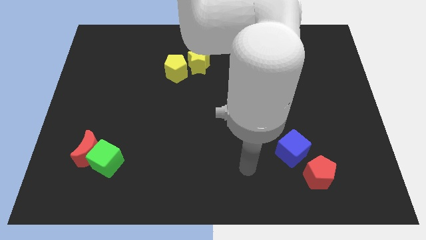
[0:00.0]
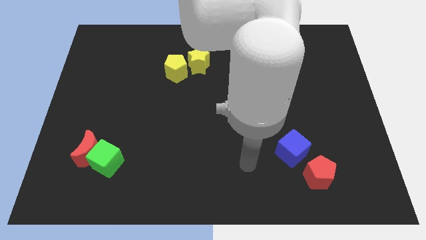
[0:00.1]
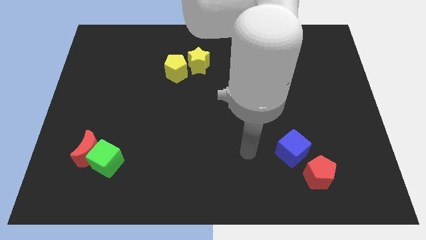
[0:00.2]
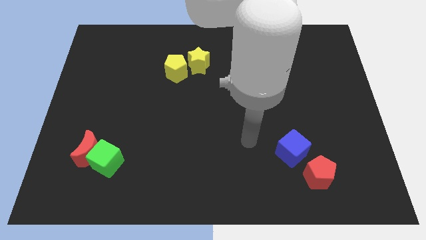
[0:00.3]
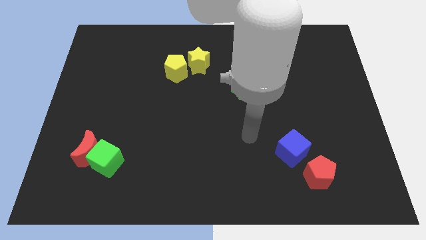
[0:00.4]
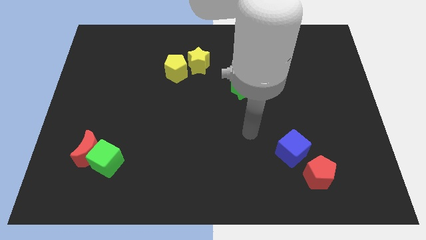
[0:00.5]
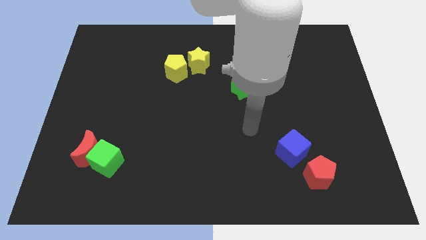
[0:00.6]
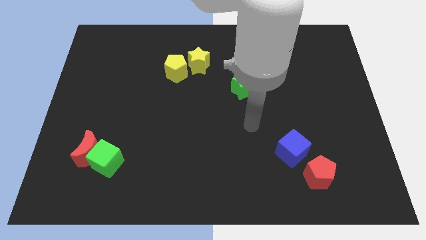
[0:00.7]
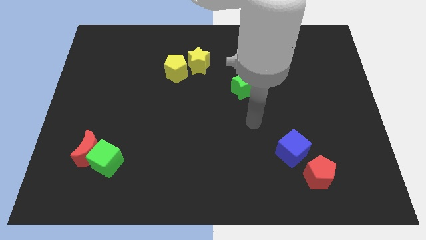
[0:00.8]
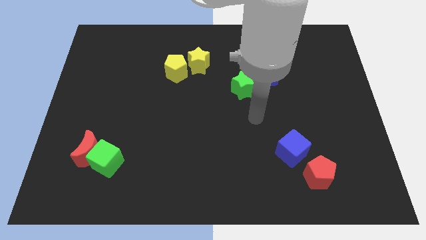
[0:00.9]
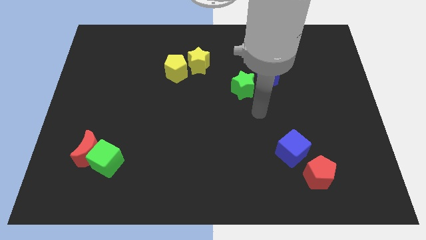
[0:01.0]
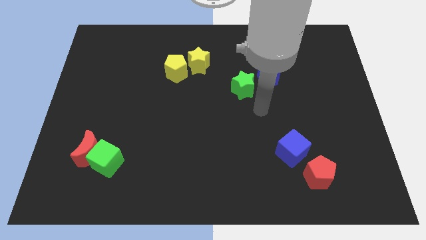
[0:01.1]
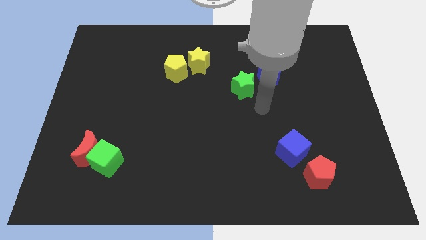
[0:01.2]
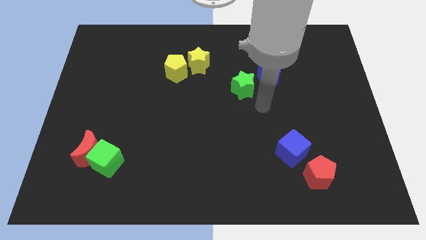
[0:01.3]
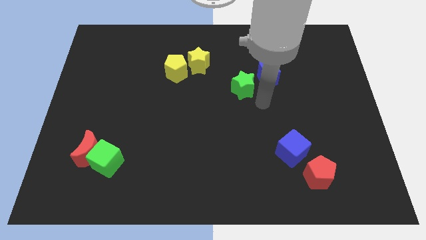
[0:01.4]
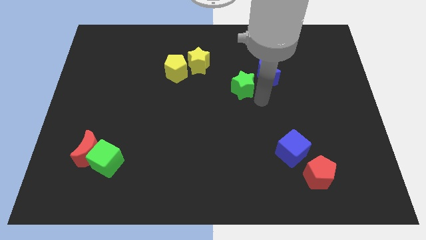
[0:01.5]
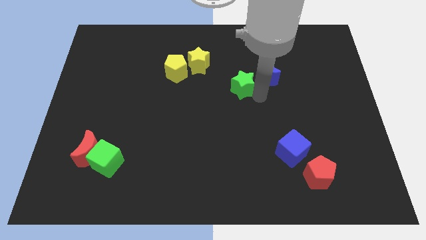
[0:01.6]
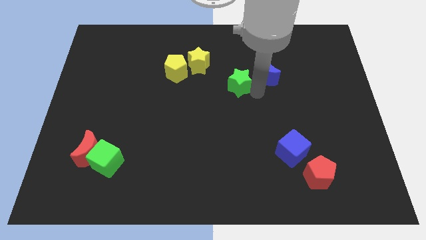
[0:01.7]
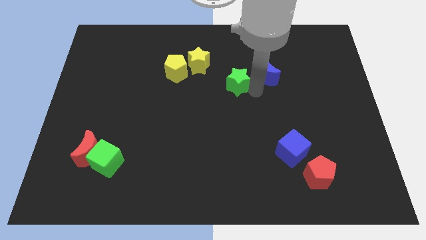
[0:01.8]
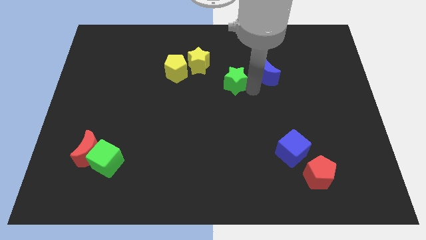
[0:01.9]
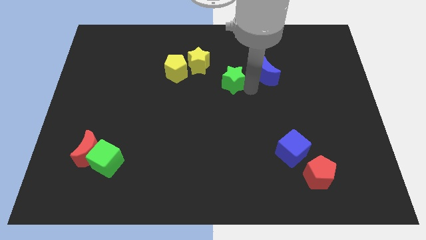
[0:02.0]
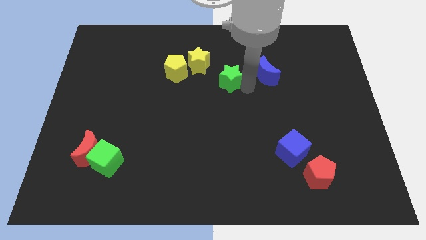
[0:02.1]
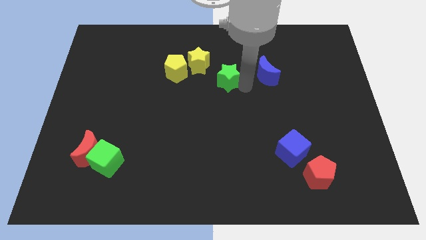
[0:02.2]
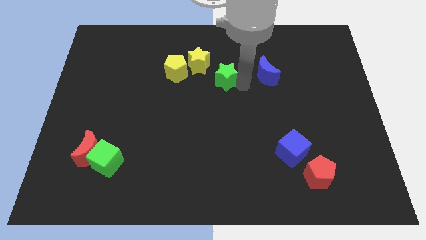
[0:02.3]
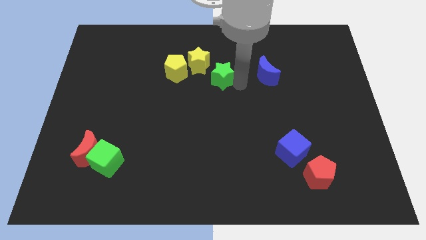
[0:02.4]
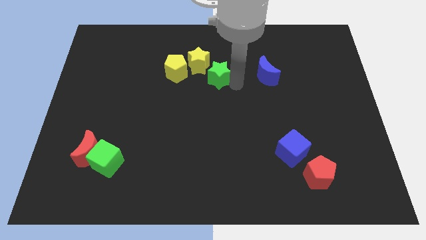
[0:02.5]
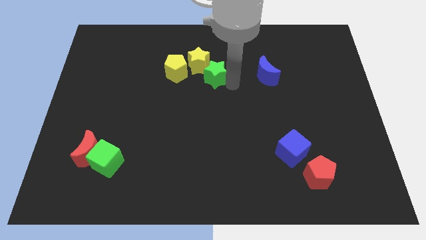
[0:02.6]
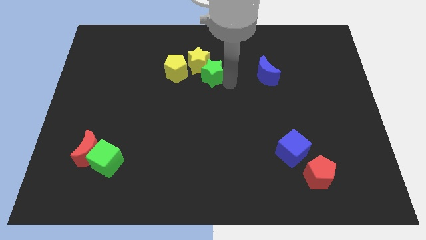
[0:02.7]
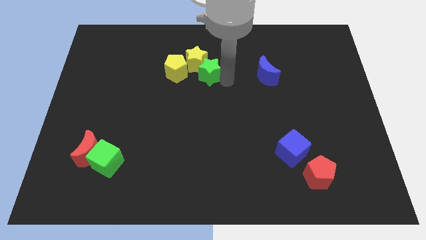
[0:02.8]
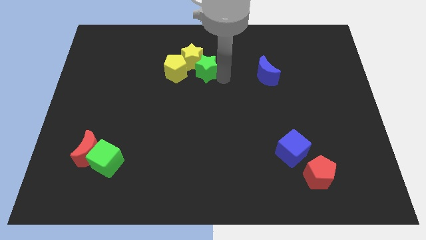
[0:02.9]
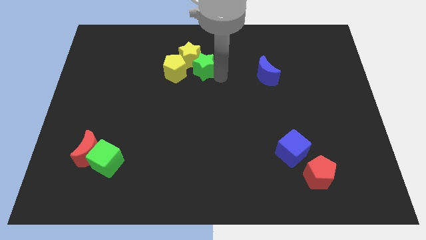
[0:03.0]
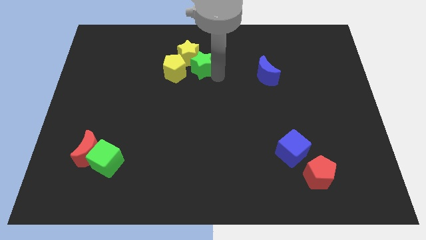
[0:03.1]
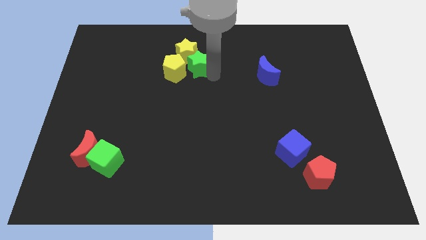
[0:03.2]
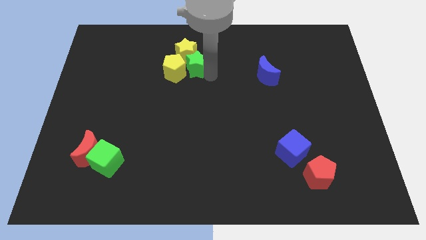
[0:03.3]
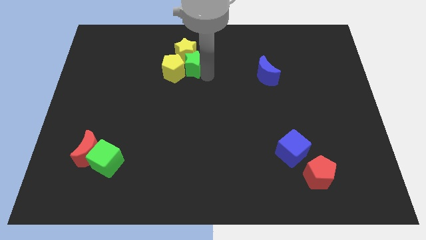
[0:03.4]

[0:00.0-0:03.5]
put the green star to the yellow pentagon

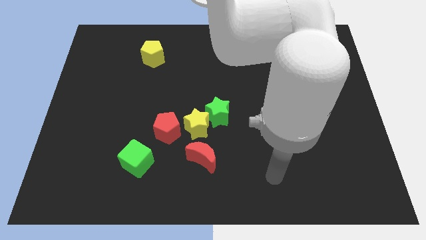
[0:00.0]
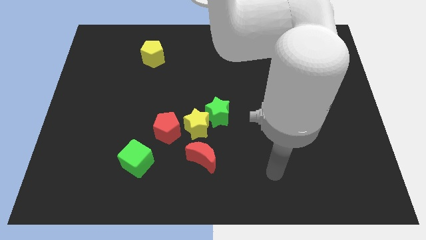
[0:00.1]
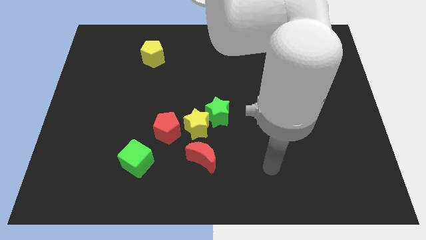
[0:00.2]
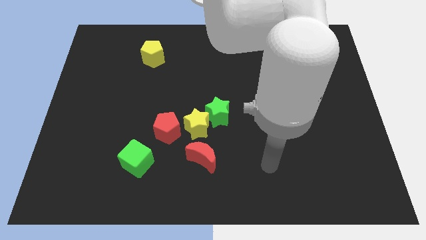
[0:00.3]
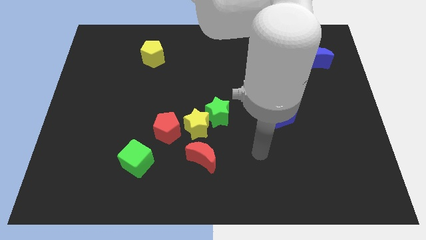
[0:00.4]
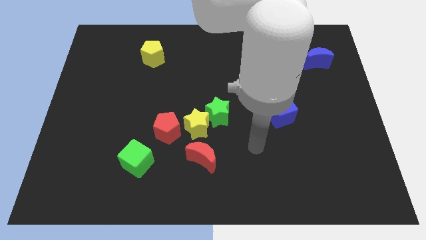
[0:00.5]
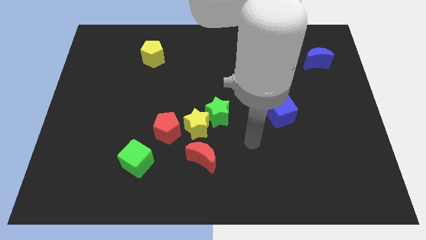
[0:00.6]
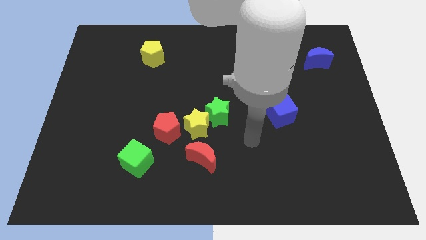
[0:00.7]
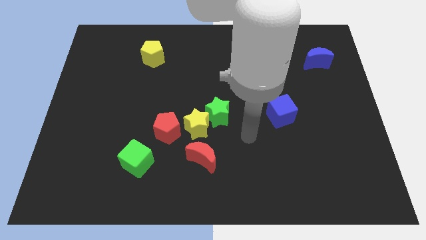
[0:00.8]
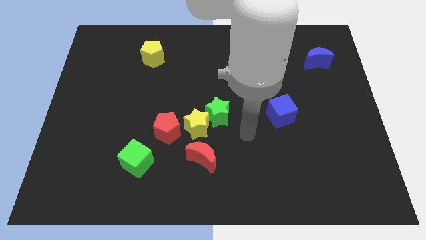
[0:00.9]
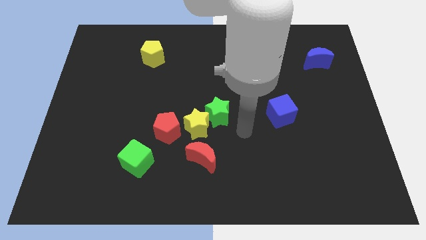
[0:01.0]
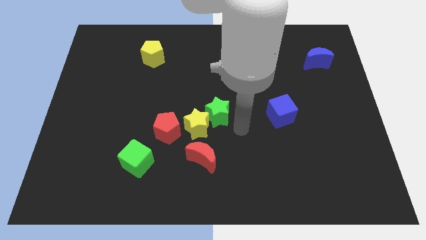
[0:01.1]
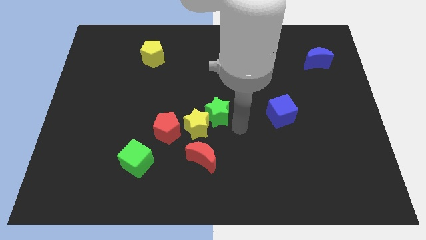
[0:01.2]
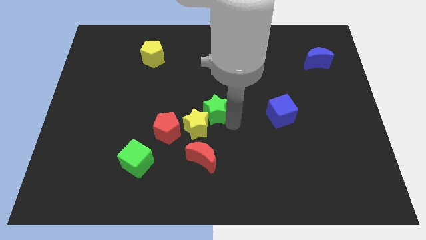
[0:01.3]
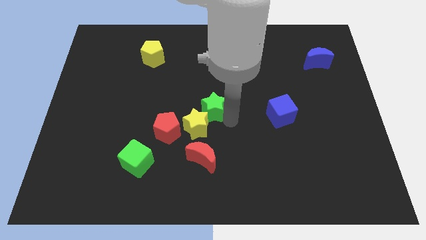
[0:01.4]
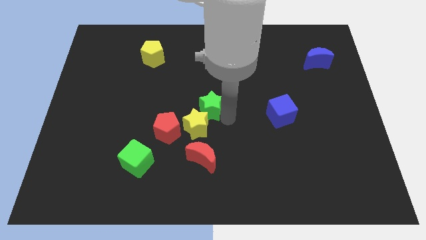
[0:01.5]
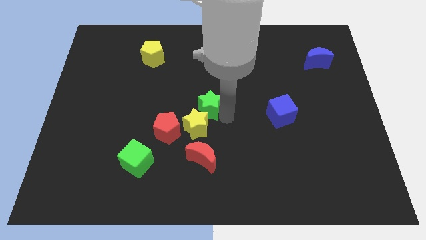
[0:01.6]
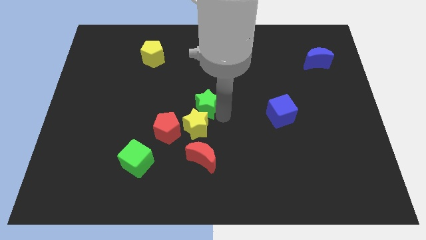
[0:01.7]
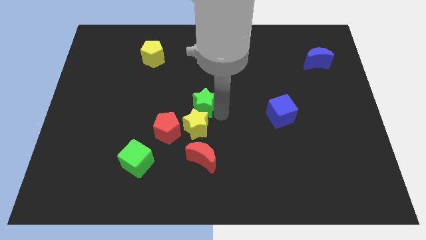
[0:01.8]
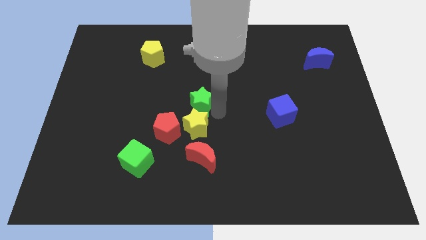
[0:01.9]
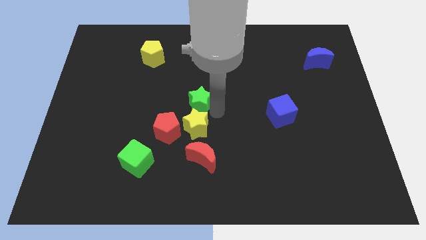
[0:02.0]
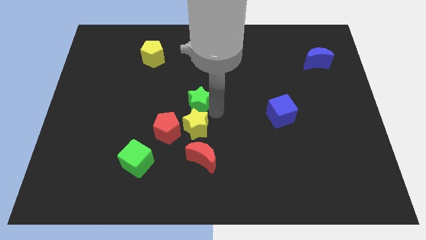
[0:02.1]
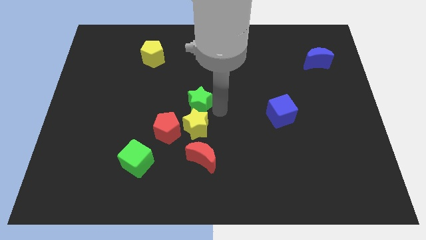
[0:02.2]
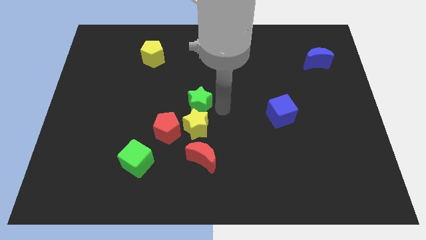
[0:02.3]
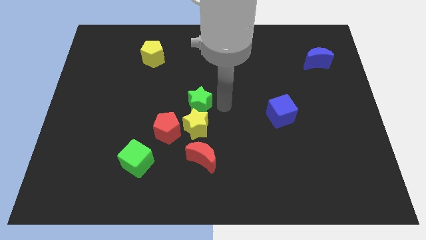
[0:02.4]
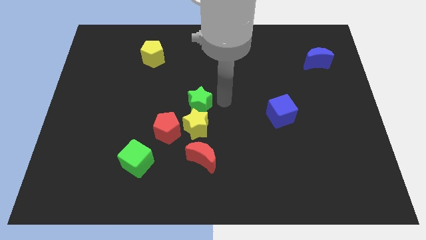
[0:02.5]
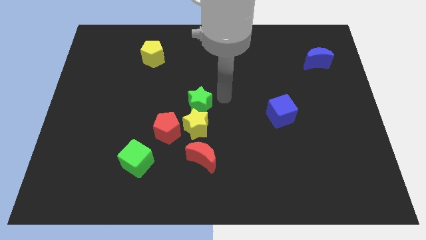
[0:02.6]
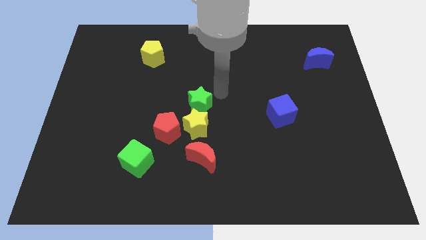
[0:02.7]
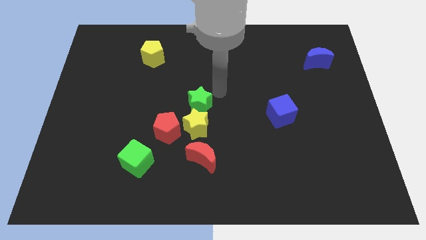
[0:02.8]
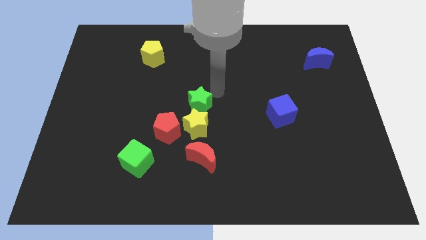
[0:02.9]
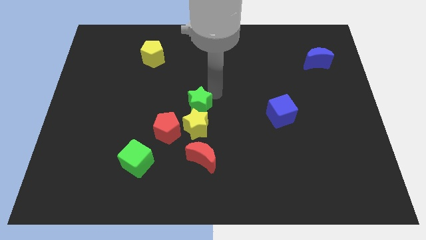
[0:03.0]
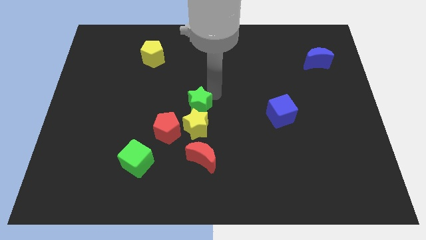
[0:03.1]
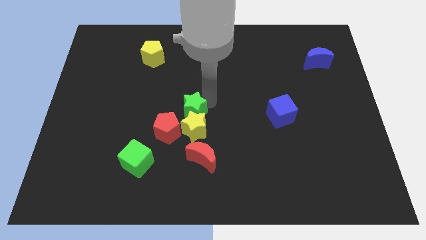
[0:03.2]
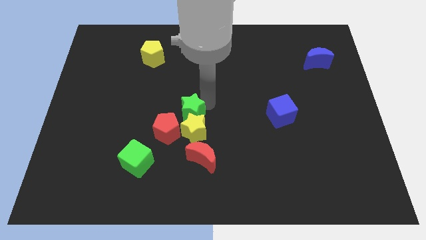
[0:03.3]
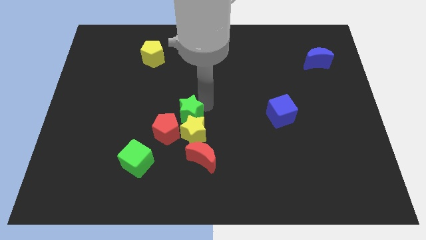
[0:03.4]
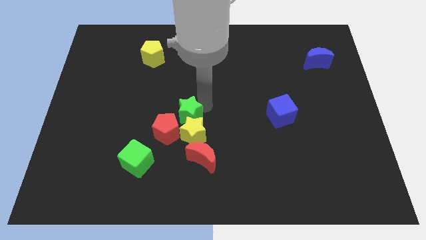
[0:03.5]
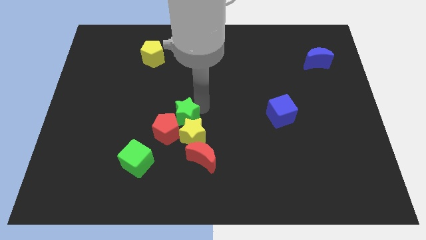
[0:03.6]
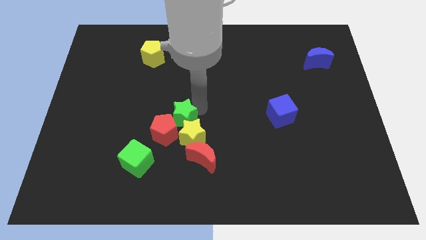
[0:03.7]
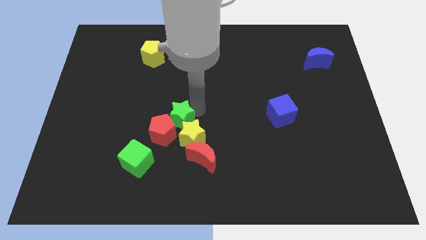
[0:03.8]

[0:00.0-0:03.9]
put the green star close to the red pentagon

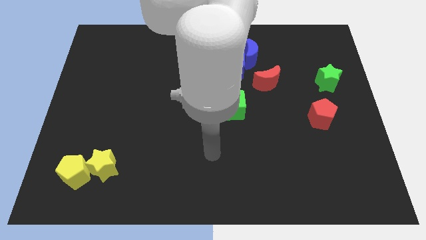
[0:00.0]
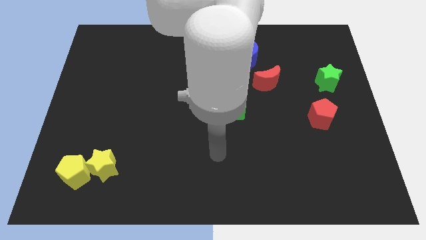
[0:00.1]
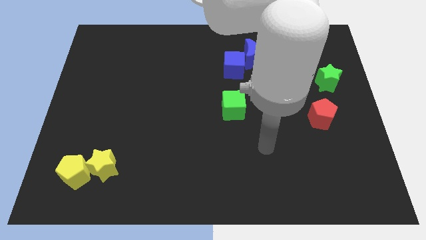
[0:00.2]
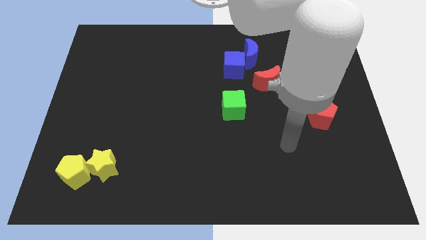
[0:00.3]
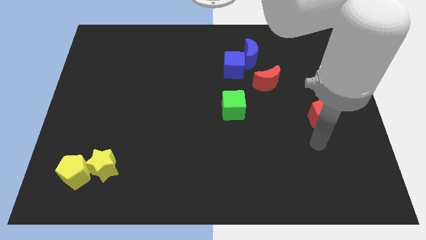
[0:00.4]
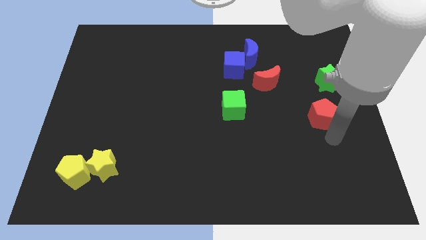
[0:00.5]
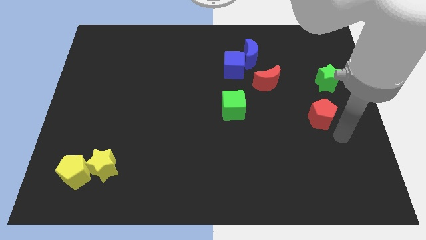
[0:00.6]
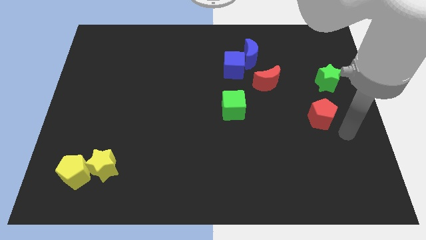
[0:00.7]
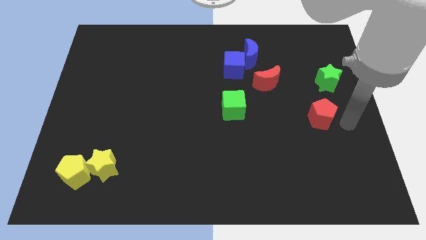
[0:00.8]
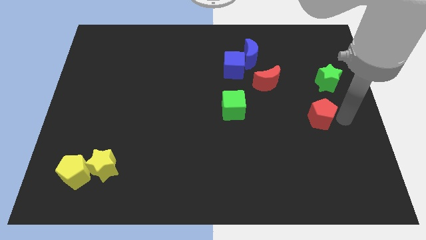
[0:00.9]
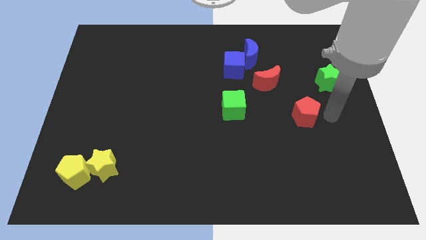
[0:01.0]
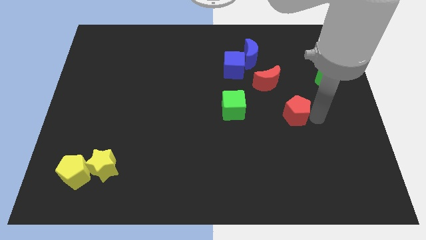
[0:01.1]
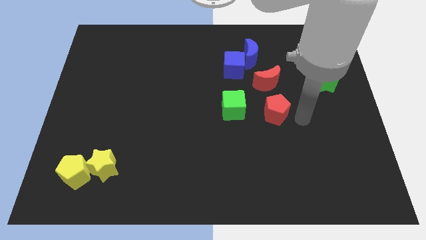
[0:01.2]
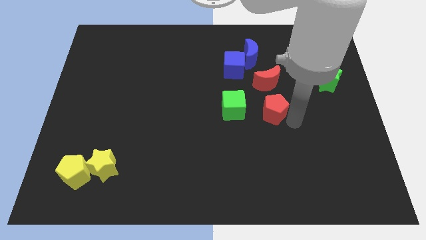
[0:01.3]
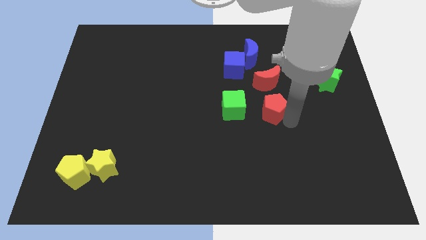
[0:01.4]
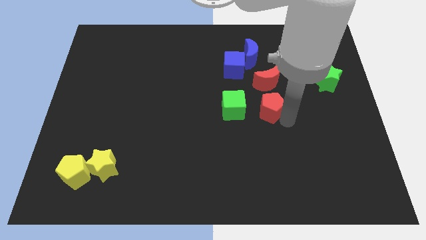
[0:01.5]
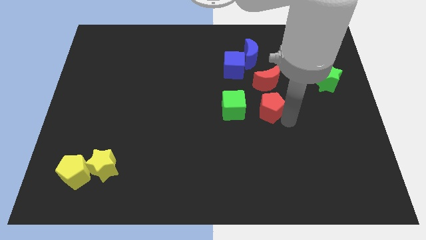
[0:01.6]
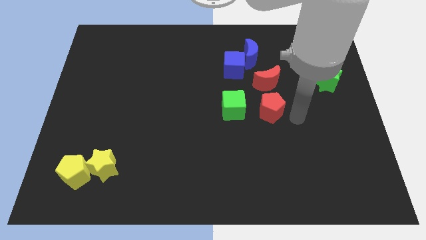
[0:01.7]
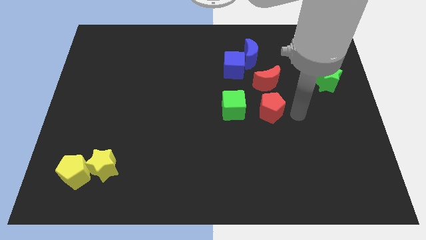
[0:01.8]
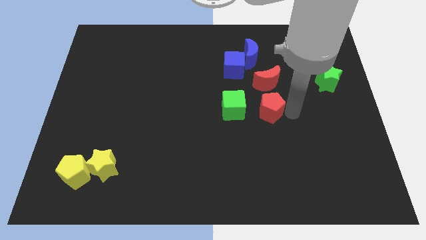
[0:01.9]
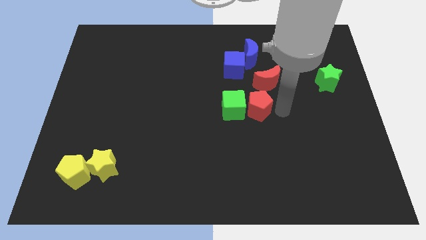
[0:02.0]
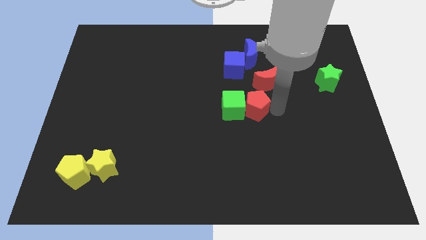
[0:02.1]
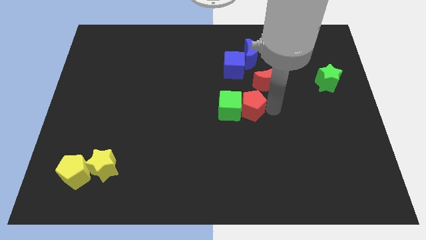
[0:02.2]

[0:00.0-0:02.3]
move the red pentagon next to the green cube
